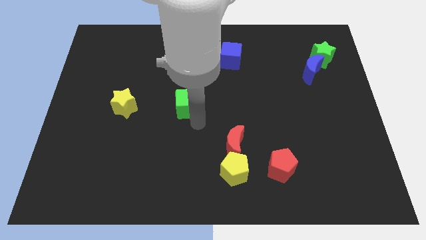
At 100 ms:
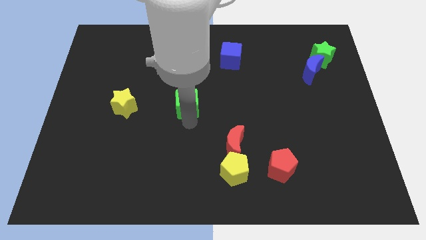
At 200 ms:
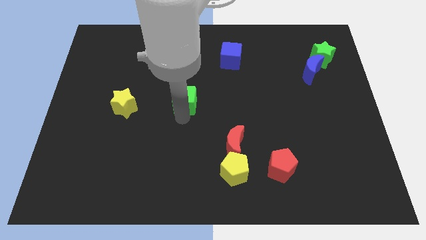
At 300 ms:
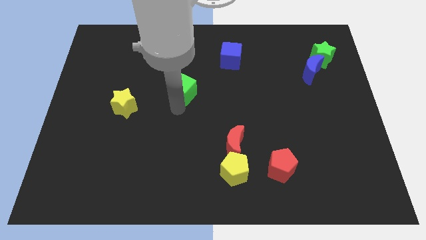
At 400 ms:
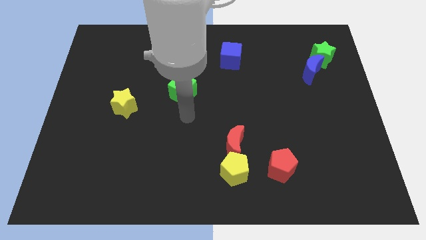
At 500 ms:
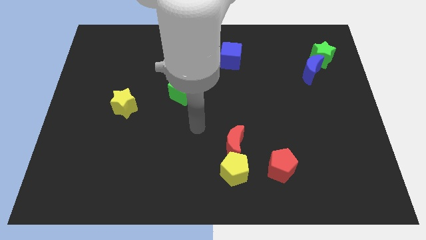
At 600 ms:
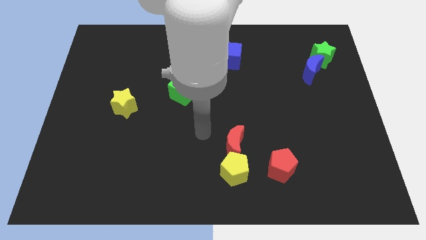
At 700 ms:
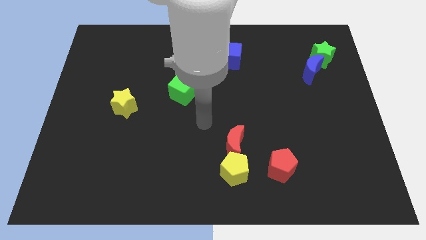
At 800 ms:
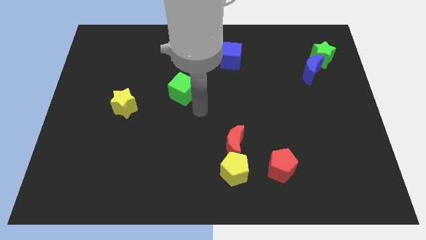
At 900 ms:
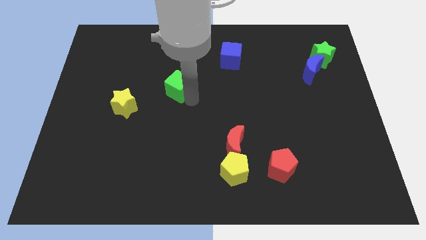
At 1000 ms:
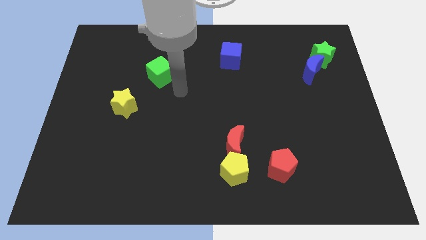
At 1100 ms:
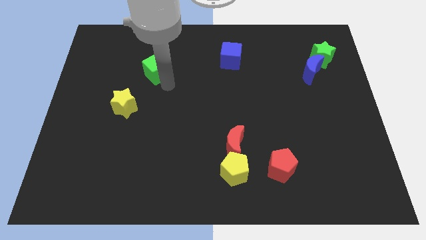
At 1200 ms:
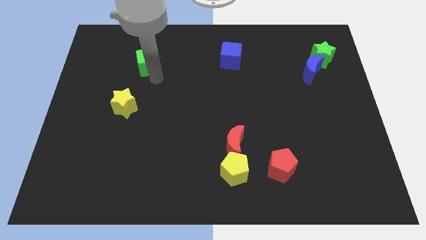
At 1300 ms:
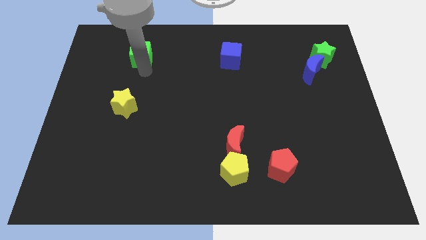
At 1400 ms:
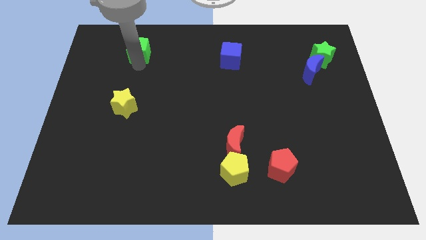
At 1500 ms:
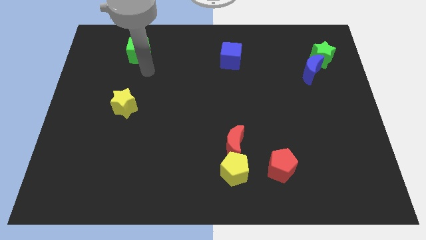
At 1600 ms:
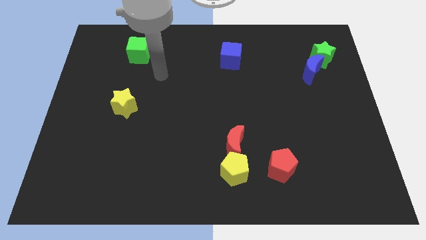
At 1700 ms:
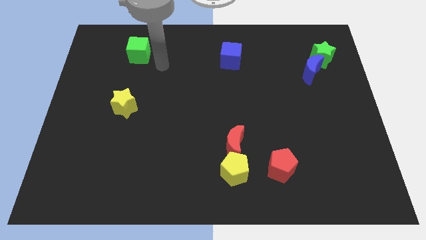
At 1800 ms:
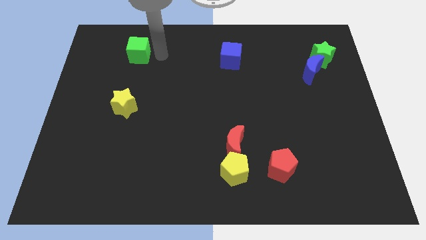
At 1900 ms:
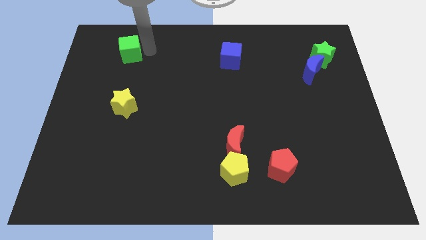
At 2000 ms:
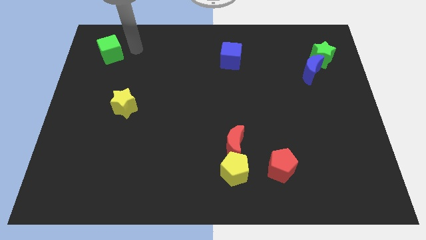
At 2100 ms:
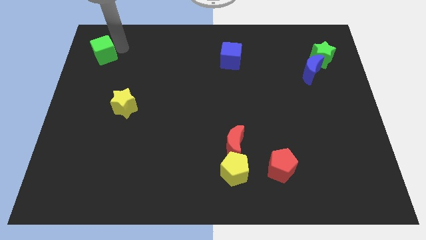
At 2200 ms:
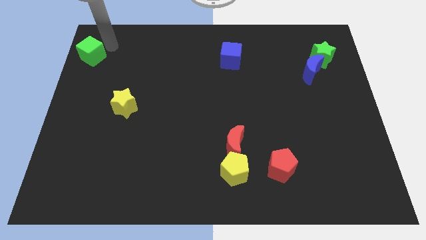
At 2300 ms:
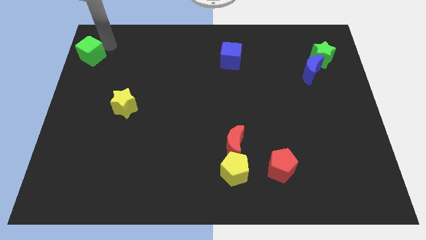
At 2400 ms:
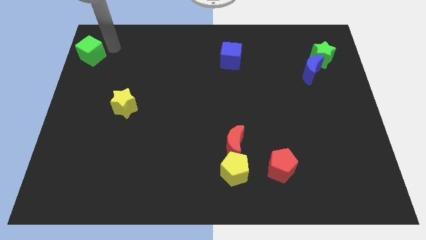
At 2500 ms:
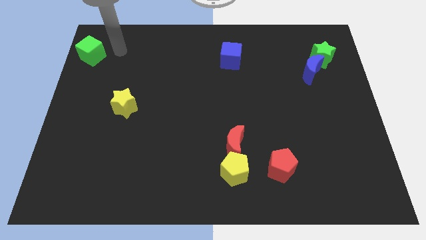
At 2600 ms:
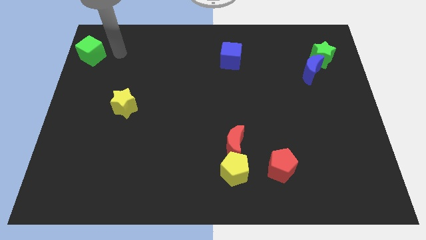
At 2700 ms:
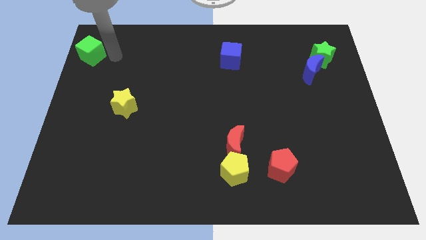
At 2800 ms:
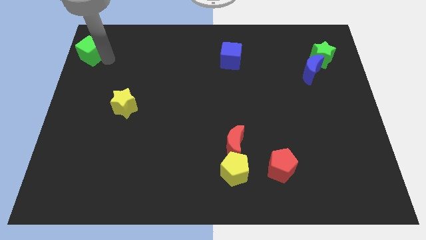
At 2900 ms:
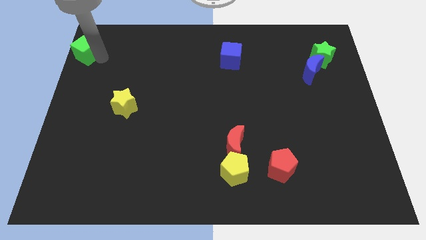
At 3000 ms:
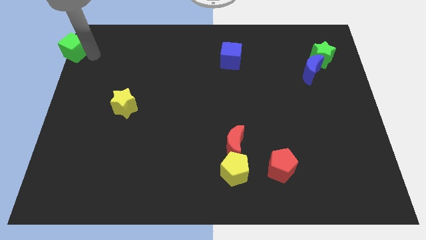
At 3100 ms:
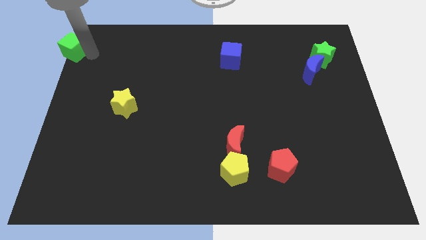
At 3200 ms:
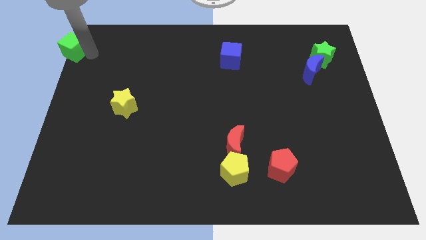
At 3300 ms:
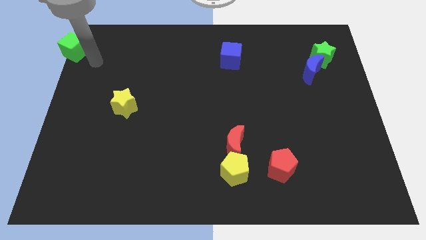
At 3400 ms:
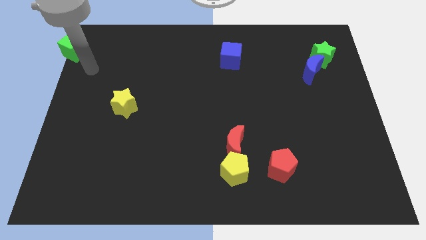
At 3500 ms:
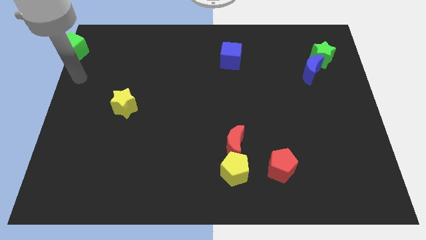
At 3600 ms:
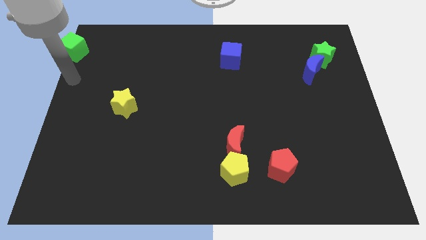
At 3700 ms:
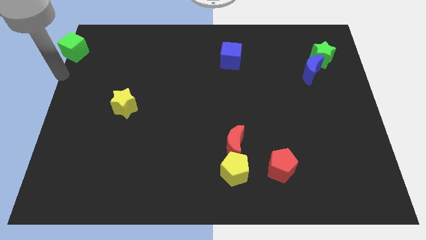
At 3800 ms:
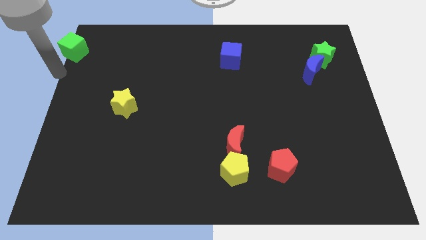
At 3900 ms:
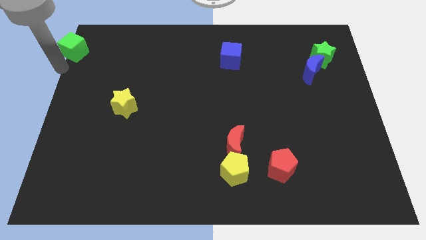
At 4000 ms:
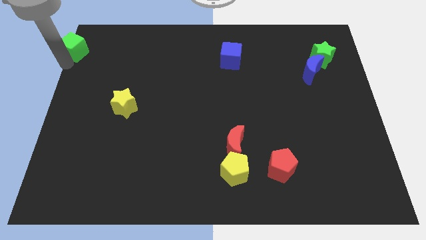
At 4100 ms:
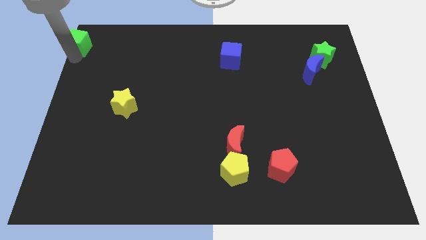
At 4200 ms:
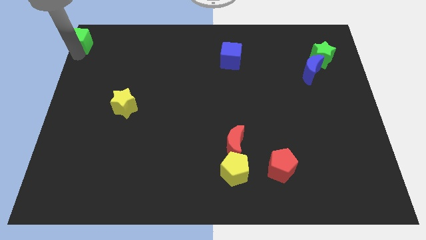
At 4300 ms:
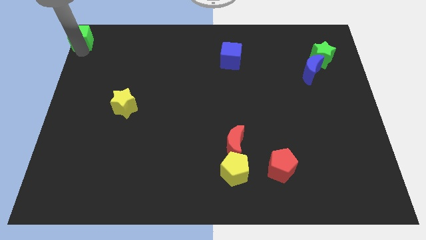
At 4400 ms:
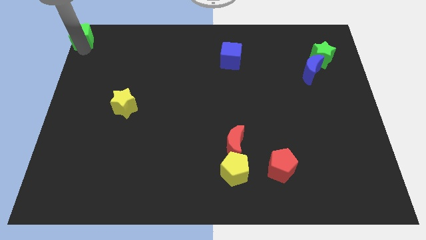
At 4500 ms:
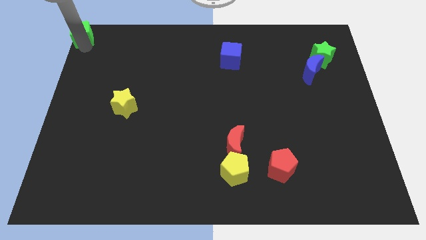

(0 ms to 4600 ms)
move green cube to the top left corner

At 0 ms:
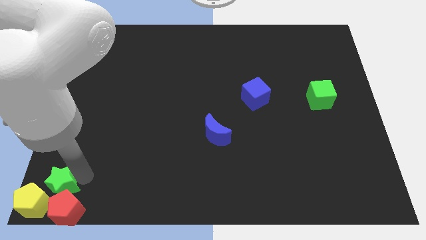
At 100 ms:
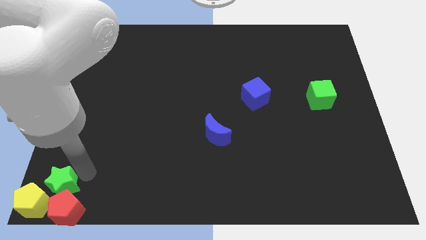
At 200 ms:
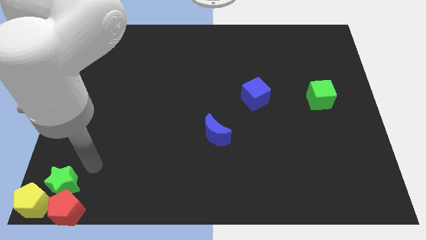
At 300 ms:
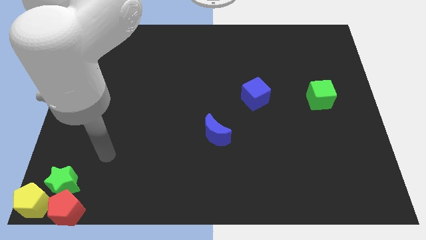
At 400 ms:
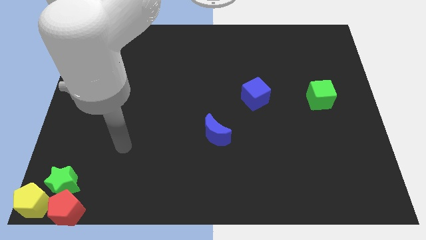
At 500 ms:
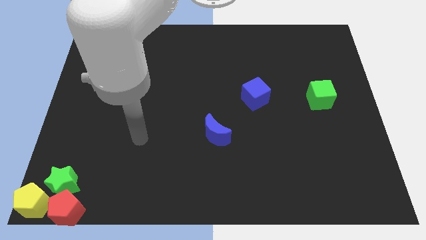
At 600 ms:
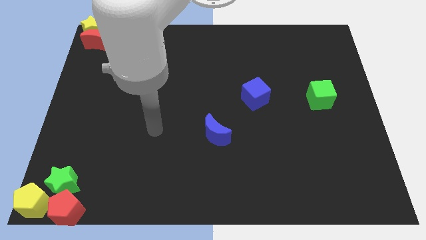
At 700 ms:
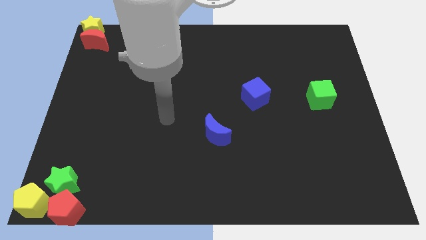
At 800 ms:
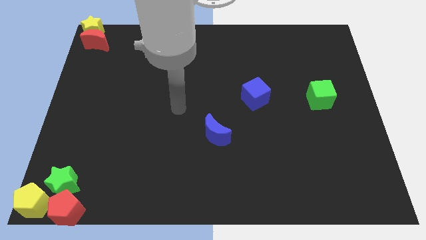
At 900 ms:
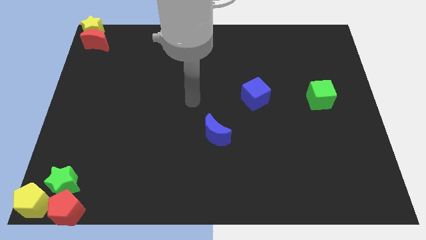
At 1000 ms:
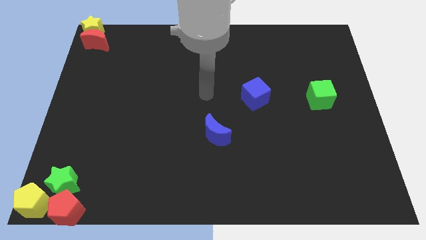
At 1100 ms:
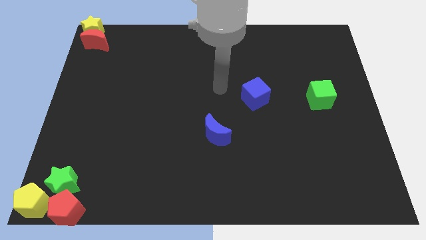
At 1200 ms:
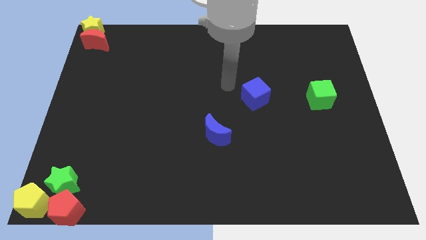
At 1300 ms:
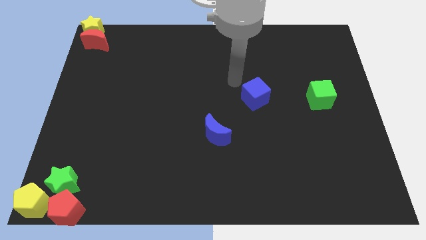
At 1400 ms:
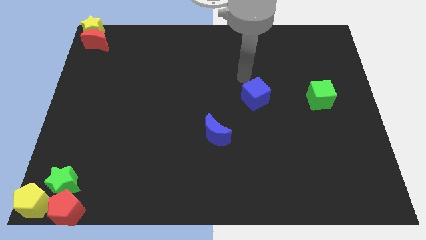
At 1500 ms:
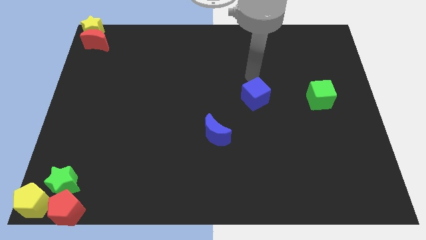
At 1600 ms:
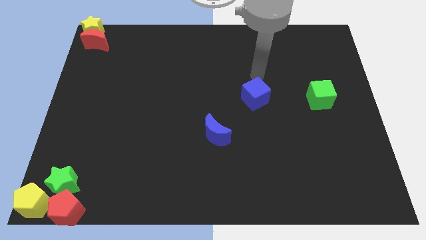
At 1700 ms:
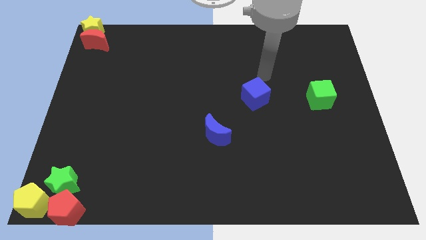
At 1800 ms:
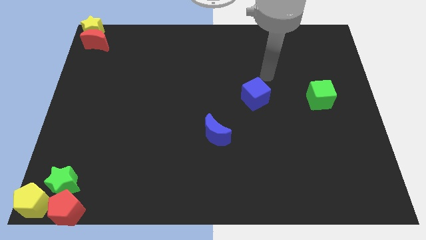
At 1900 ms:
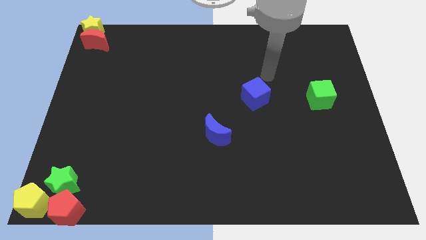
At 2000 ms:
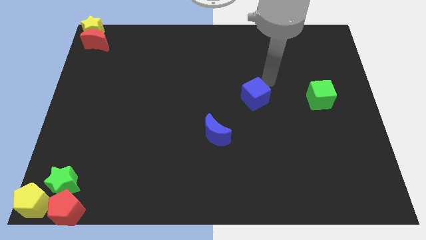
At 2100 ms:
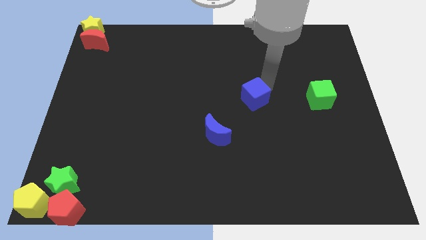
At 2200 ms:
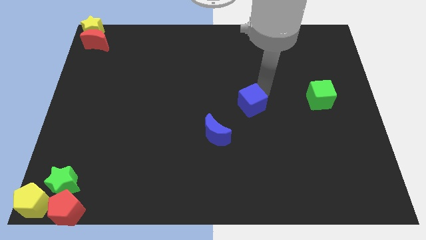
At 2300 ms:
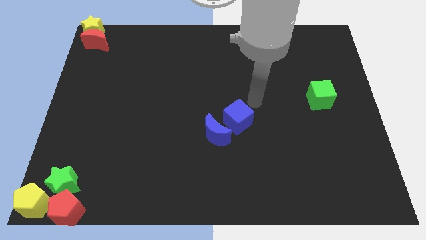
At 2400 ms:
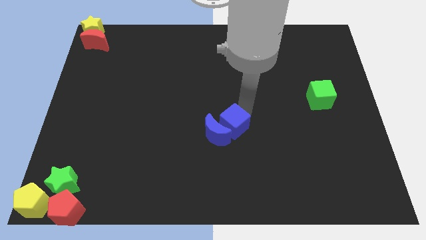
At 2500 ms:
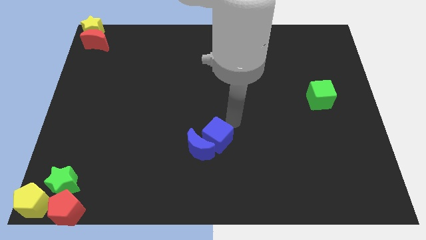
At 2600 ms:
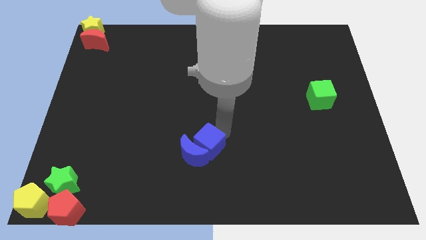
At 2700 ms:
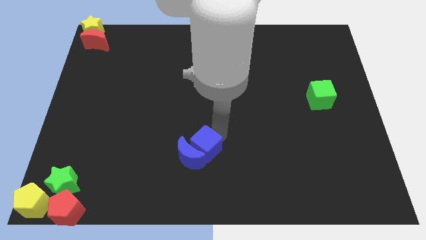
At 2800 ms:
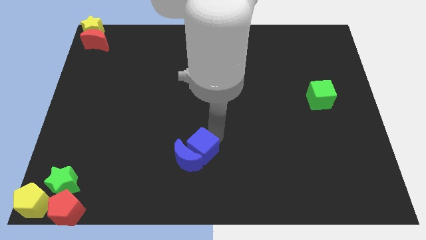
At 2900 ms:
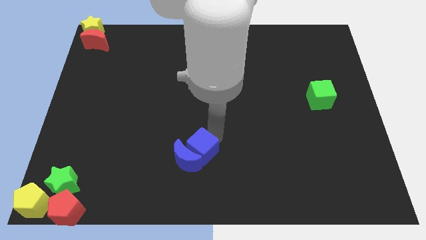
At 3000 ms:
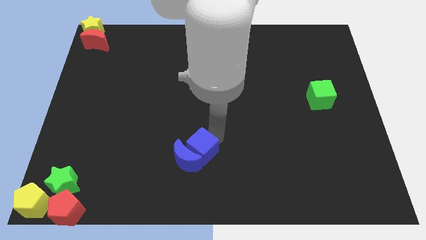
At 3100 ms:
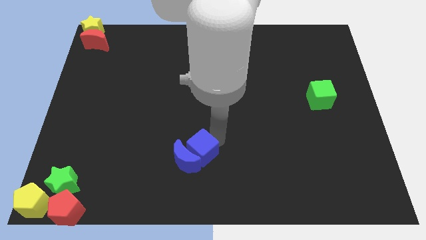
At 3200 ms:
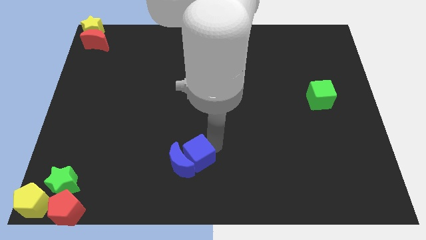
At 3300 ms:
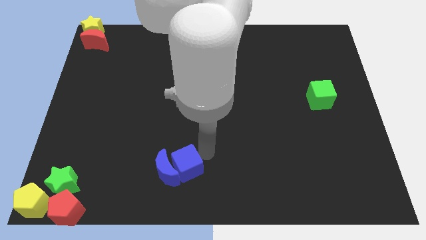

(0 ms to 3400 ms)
drag the blue cube and the blue moon towards the group of blocks

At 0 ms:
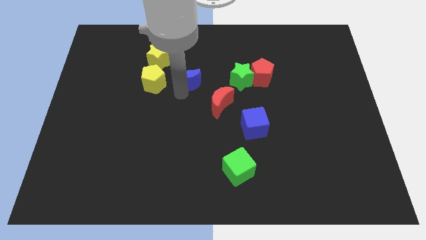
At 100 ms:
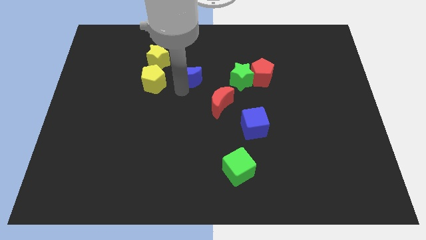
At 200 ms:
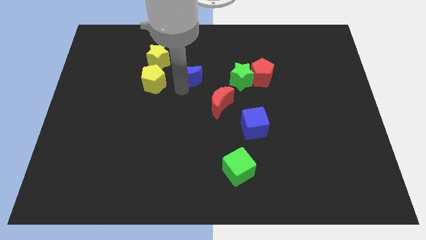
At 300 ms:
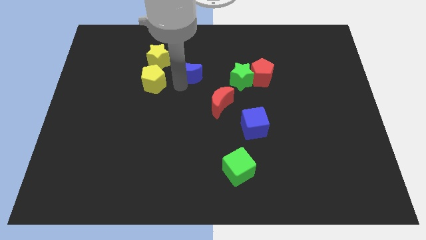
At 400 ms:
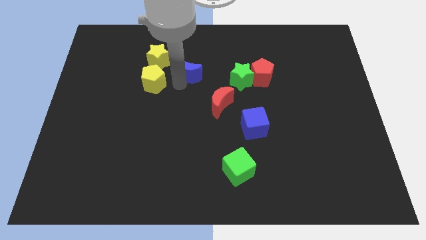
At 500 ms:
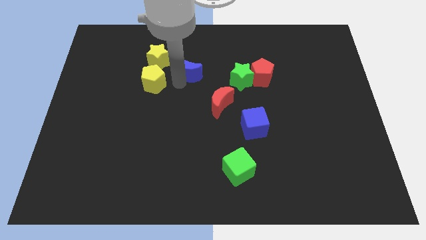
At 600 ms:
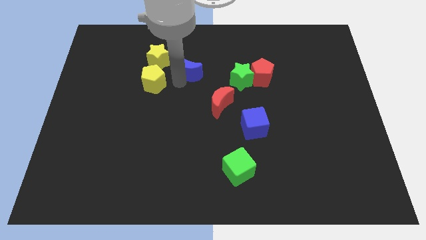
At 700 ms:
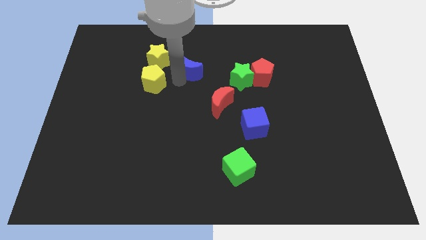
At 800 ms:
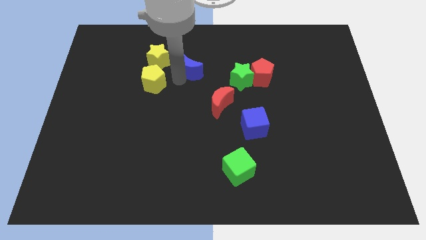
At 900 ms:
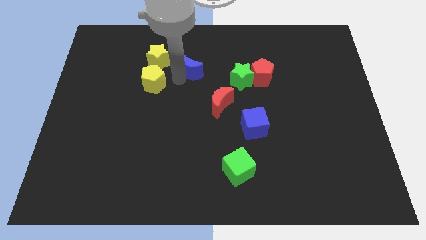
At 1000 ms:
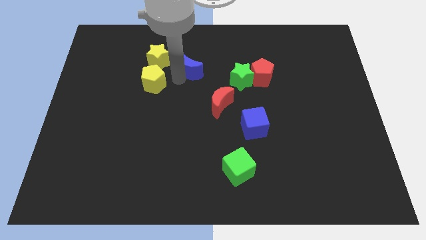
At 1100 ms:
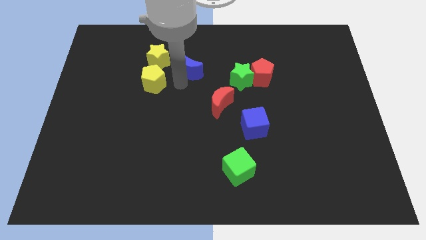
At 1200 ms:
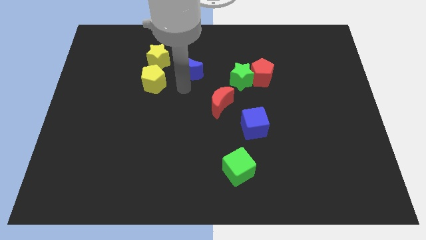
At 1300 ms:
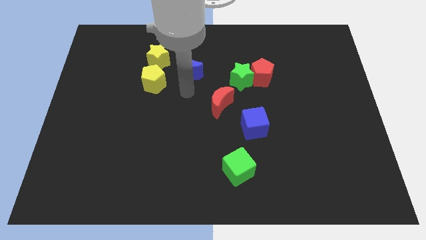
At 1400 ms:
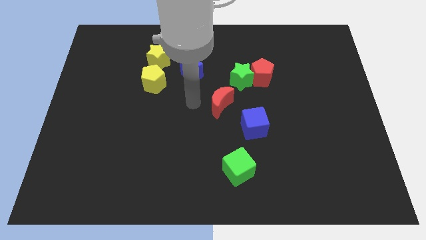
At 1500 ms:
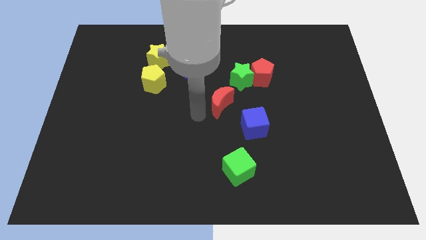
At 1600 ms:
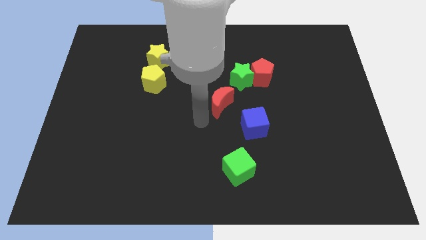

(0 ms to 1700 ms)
push blue crescent towards the yellow star
